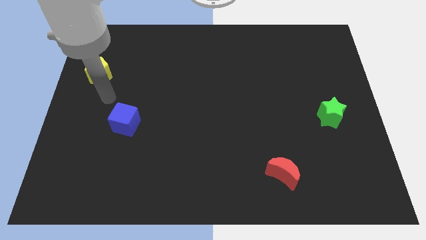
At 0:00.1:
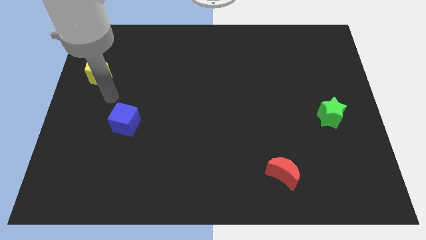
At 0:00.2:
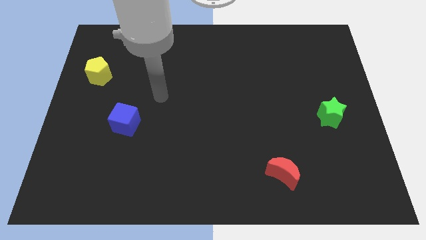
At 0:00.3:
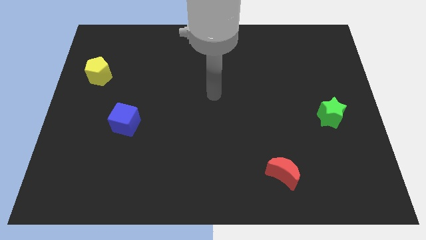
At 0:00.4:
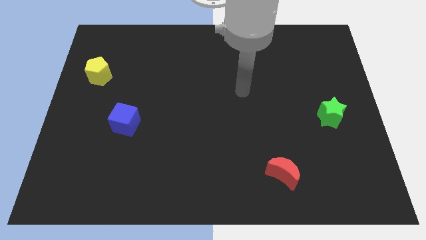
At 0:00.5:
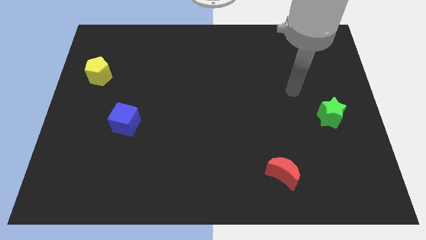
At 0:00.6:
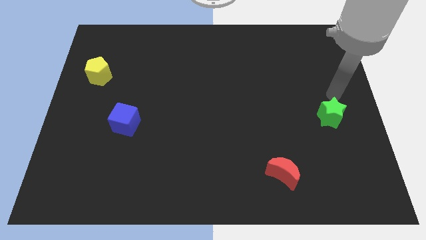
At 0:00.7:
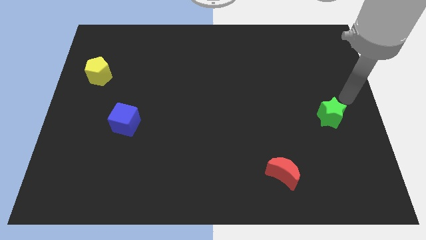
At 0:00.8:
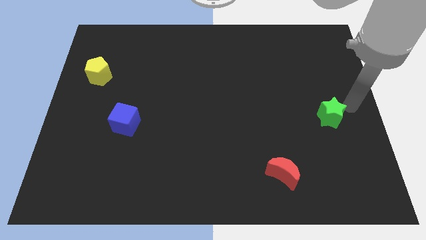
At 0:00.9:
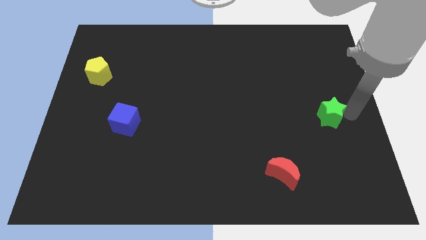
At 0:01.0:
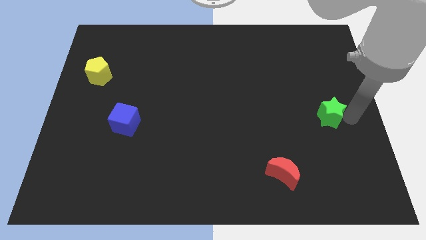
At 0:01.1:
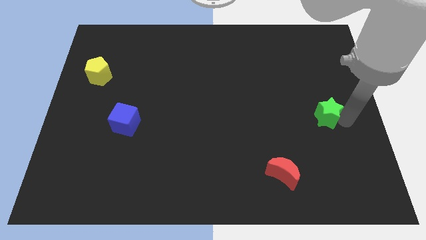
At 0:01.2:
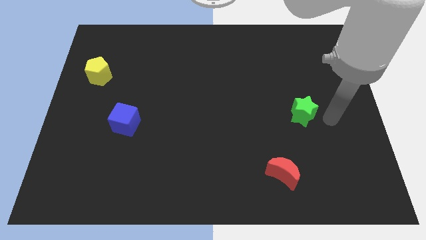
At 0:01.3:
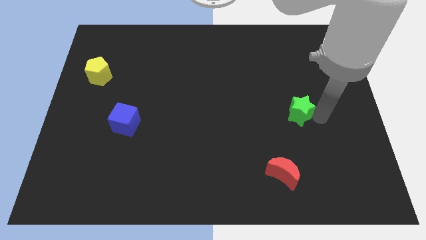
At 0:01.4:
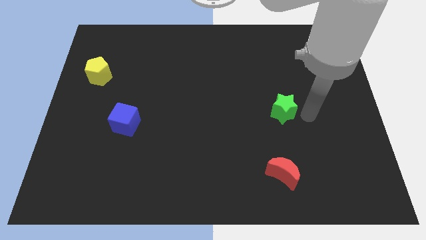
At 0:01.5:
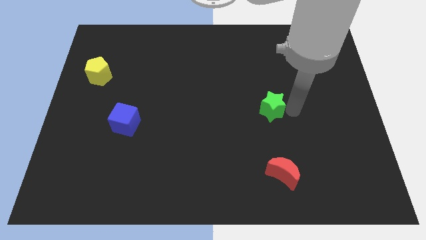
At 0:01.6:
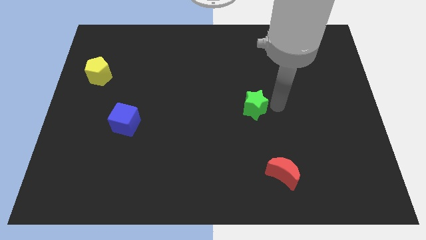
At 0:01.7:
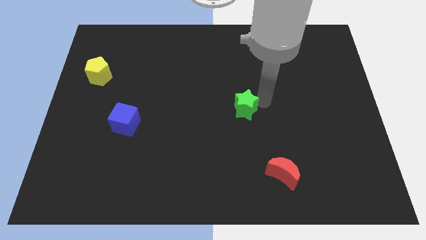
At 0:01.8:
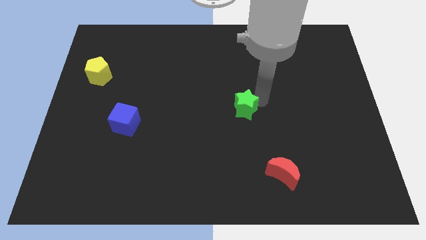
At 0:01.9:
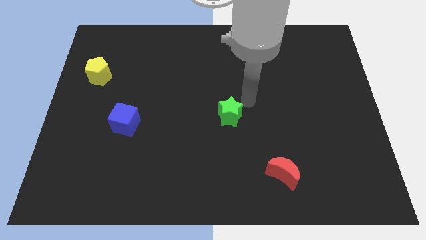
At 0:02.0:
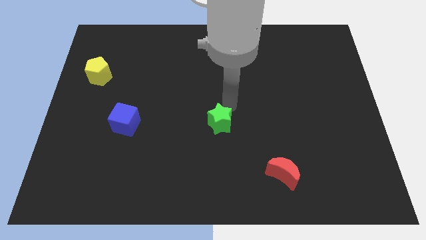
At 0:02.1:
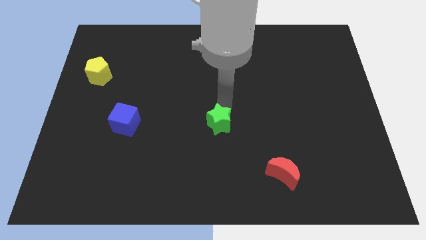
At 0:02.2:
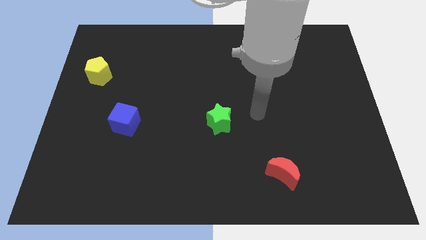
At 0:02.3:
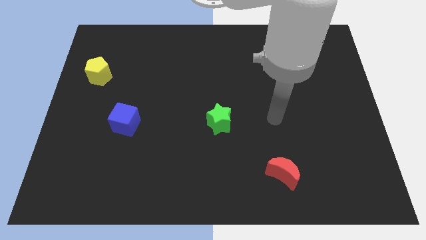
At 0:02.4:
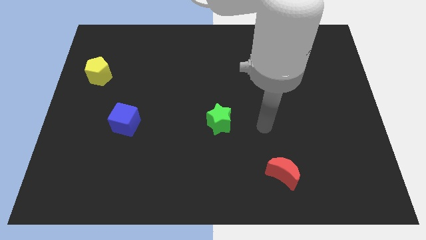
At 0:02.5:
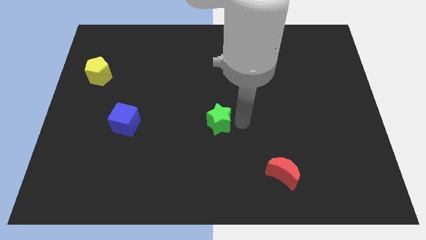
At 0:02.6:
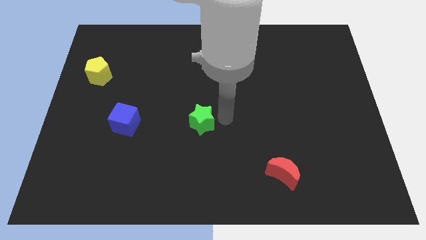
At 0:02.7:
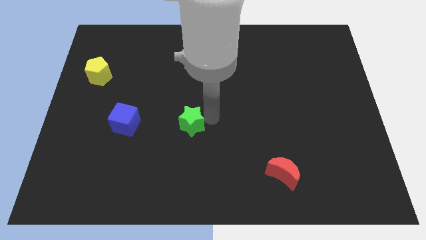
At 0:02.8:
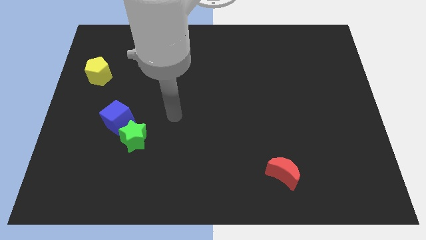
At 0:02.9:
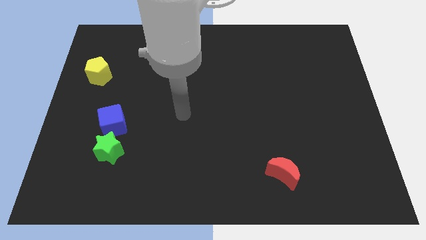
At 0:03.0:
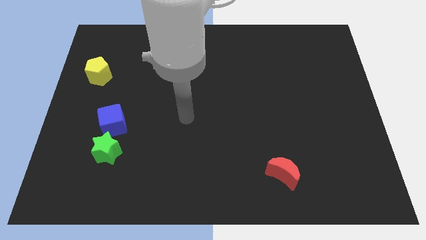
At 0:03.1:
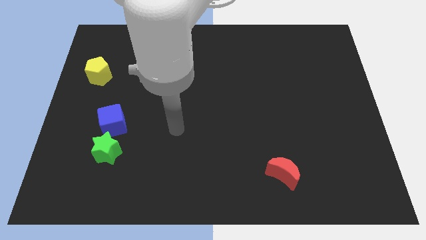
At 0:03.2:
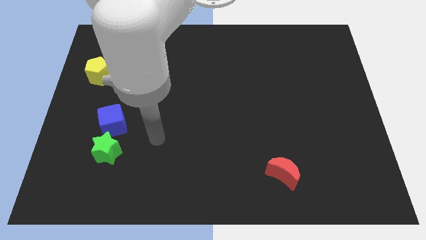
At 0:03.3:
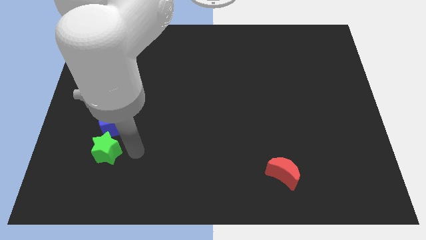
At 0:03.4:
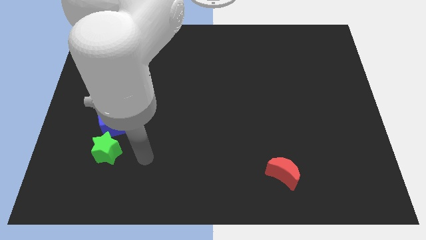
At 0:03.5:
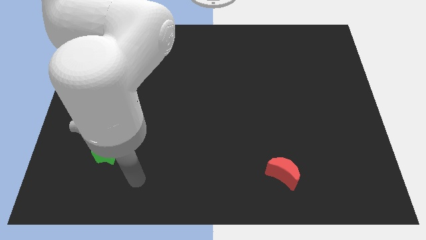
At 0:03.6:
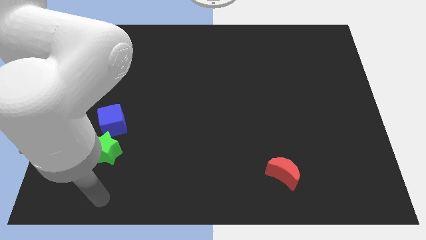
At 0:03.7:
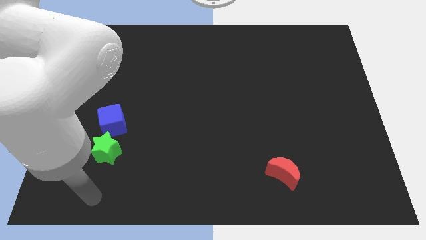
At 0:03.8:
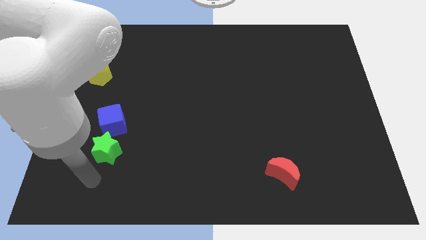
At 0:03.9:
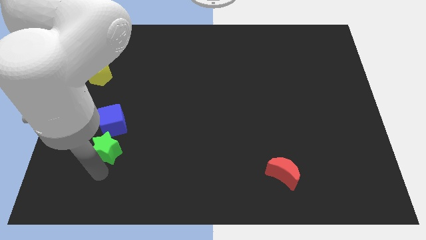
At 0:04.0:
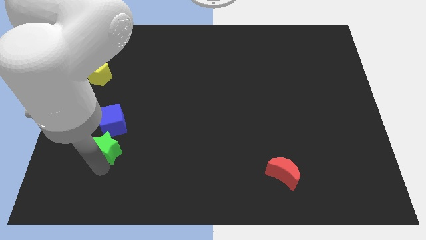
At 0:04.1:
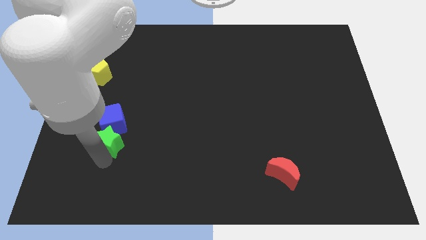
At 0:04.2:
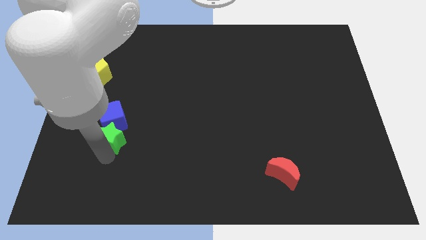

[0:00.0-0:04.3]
push the green star towards the blue block

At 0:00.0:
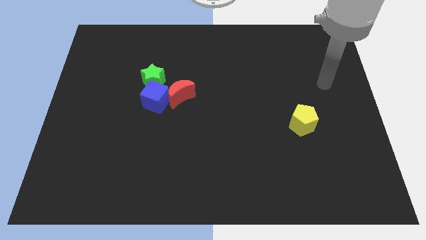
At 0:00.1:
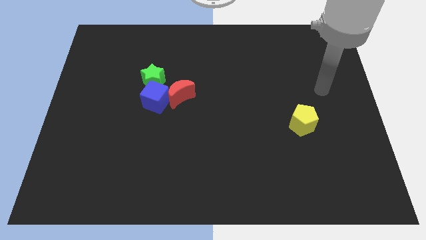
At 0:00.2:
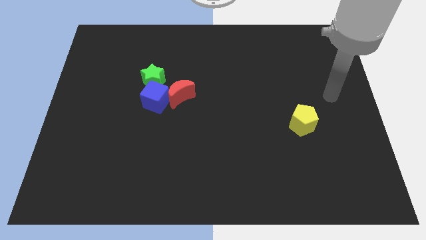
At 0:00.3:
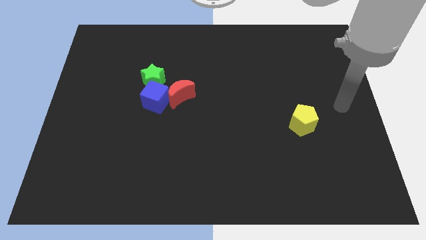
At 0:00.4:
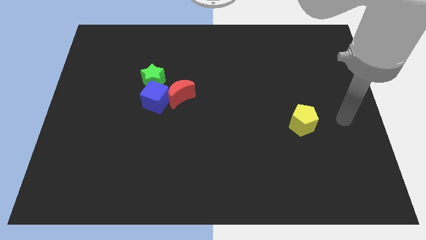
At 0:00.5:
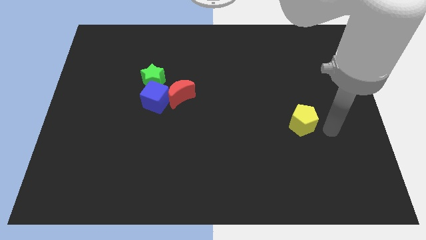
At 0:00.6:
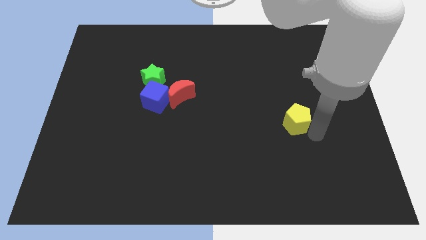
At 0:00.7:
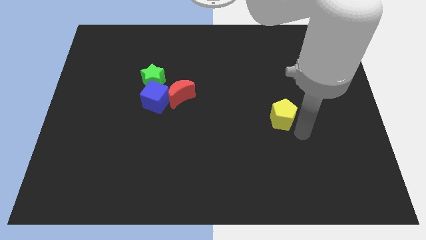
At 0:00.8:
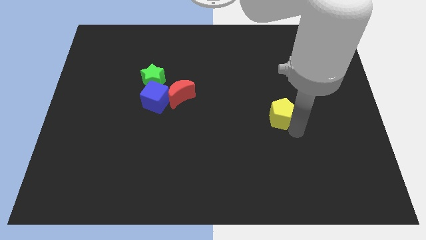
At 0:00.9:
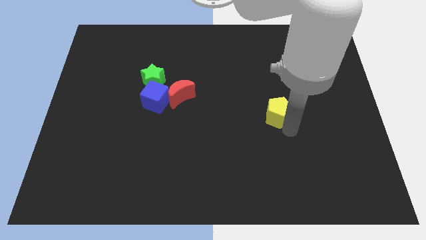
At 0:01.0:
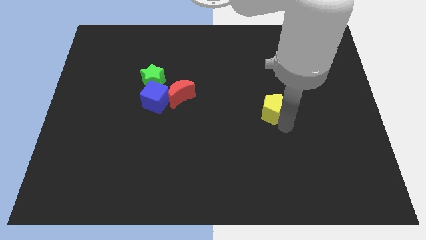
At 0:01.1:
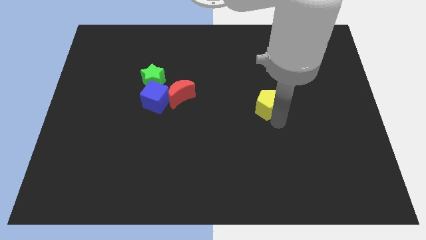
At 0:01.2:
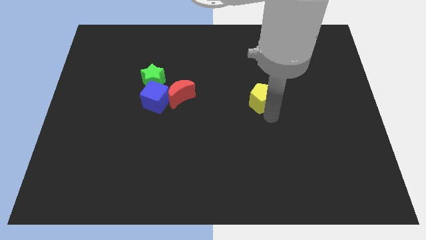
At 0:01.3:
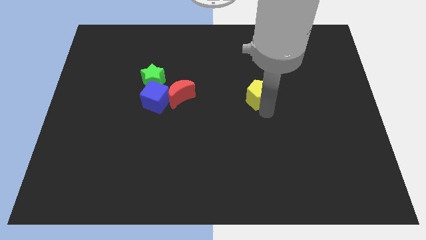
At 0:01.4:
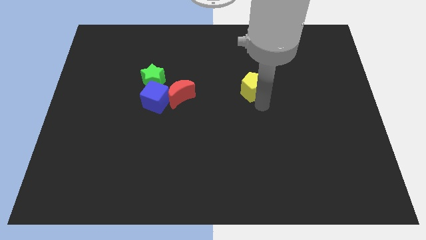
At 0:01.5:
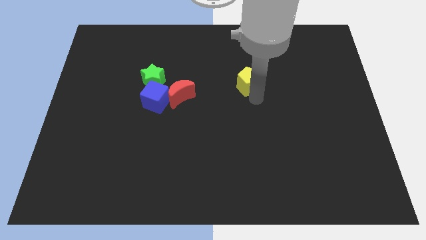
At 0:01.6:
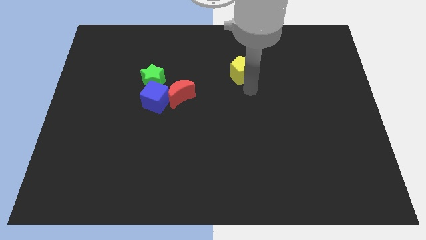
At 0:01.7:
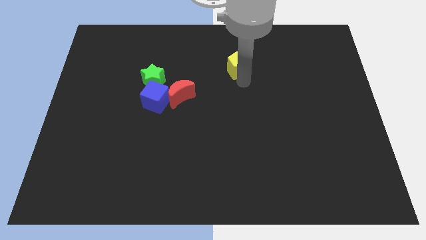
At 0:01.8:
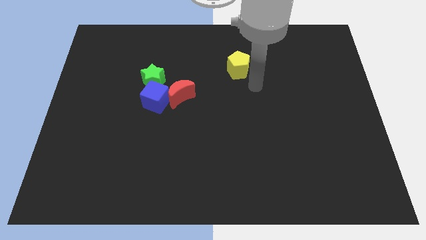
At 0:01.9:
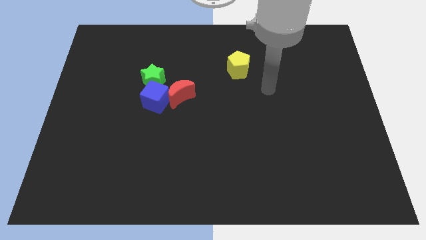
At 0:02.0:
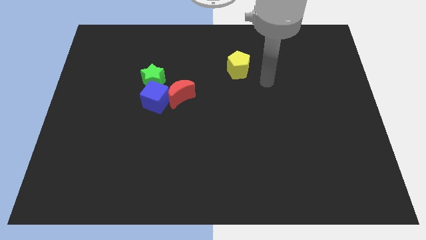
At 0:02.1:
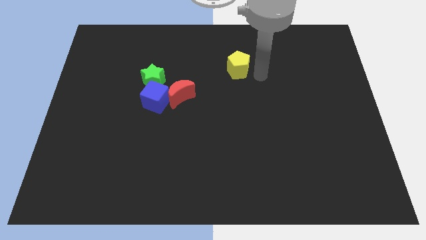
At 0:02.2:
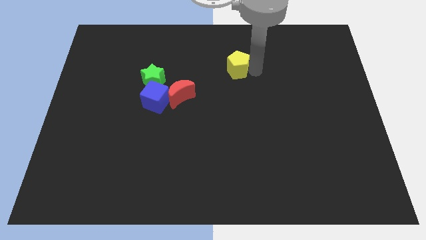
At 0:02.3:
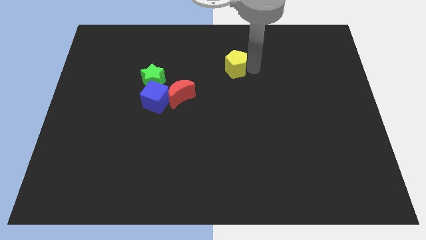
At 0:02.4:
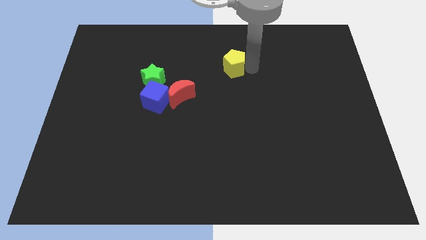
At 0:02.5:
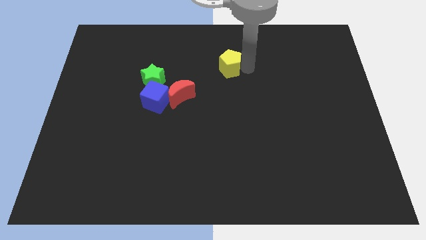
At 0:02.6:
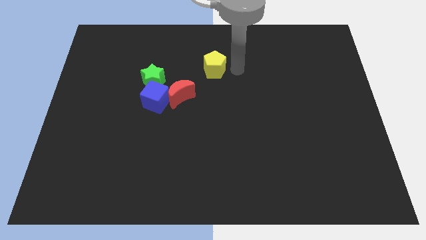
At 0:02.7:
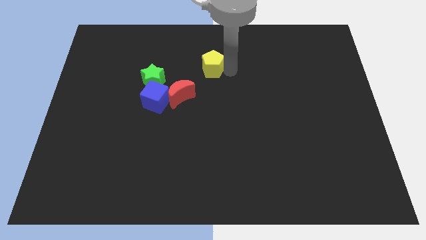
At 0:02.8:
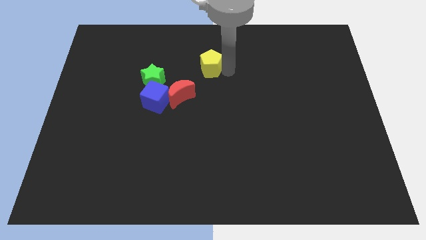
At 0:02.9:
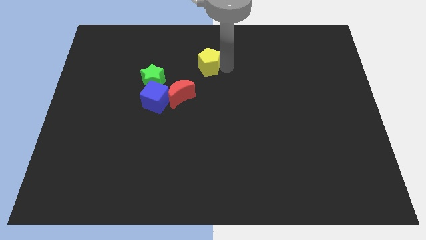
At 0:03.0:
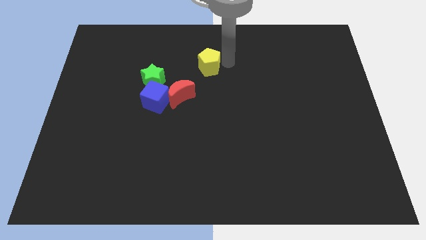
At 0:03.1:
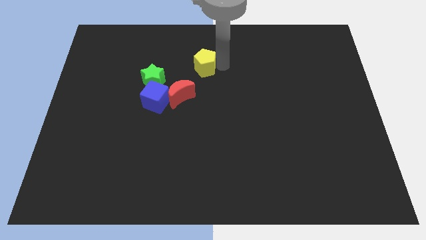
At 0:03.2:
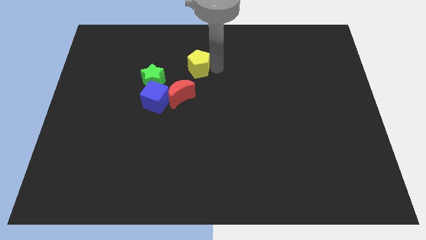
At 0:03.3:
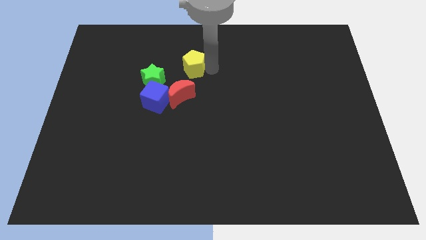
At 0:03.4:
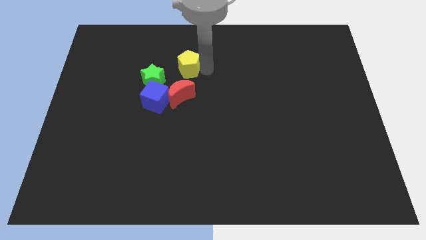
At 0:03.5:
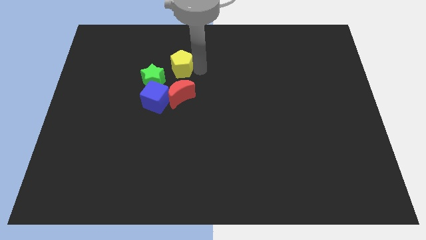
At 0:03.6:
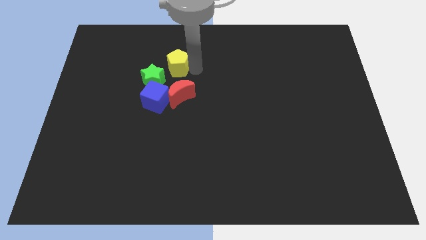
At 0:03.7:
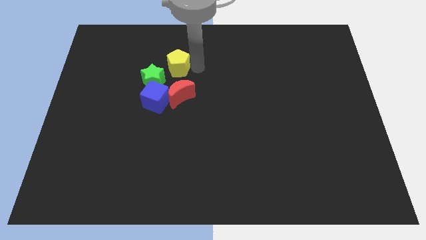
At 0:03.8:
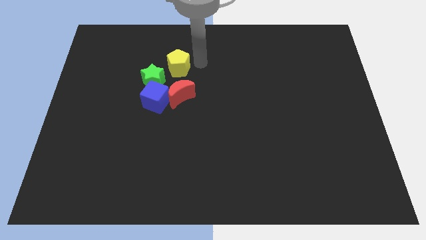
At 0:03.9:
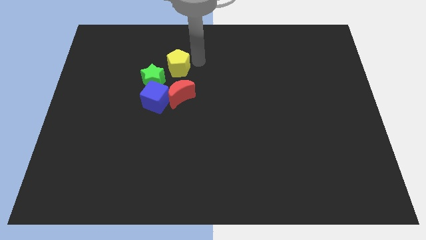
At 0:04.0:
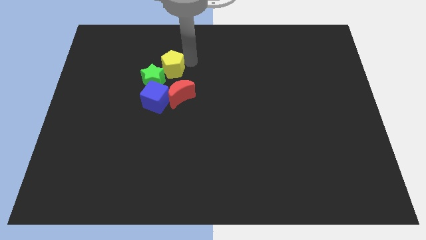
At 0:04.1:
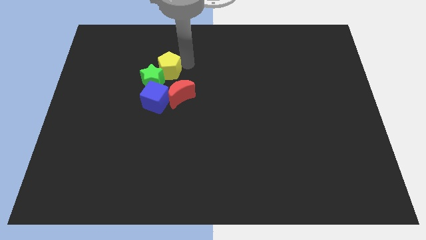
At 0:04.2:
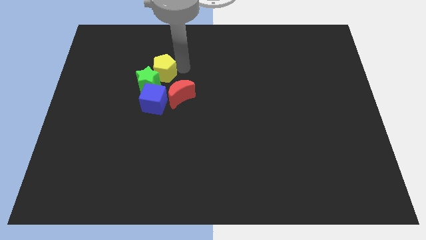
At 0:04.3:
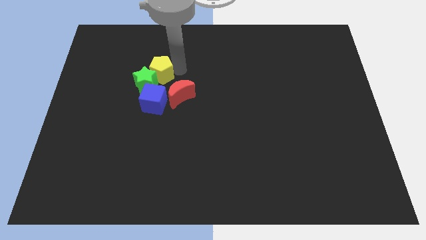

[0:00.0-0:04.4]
put the yellow pentagon close to the green star
